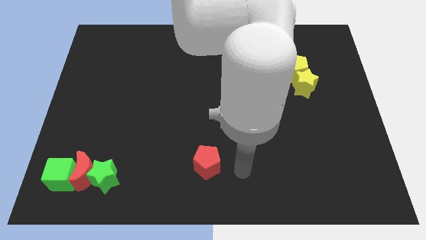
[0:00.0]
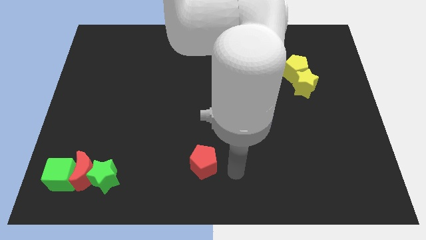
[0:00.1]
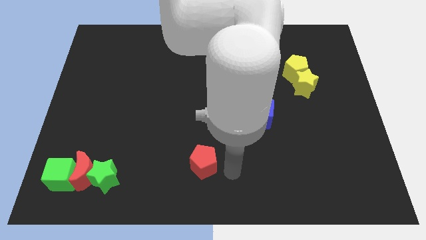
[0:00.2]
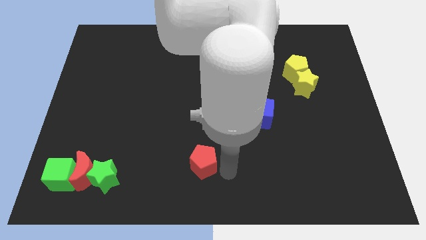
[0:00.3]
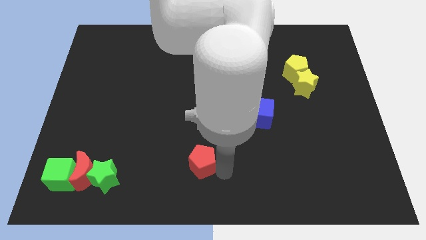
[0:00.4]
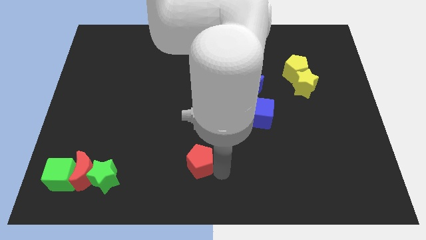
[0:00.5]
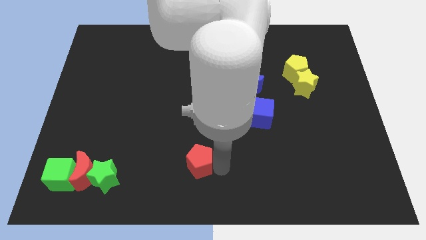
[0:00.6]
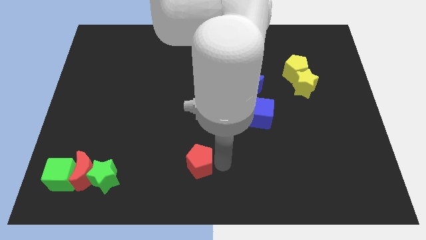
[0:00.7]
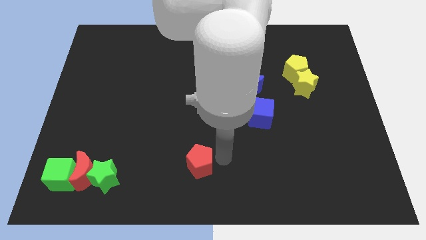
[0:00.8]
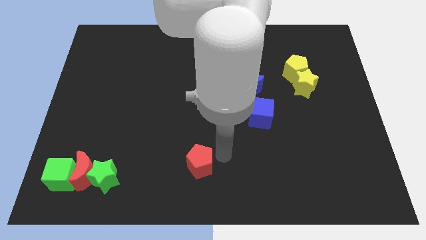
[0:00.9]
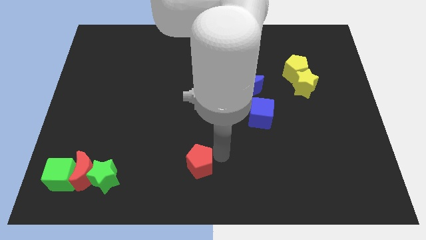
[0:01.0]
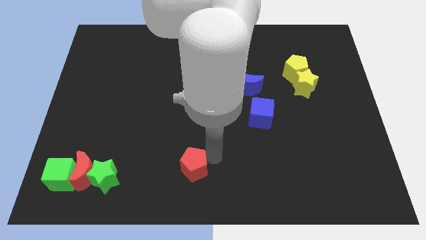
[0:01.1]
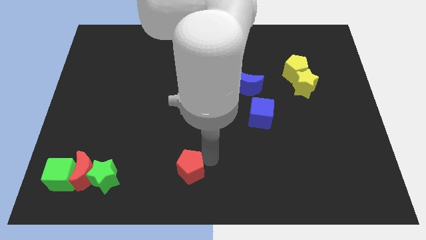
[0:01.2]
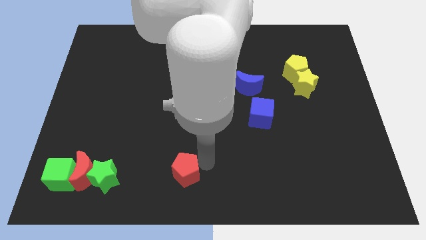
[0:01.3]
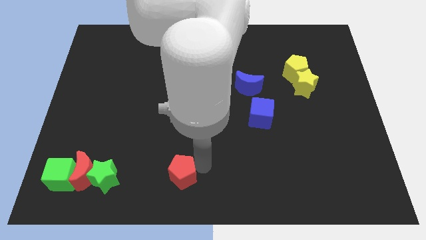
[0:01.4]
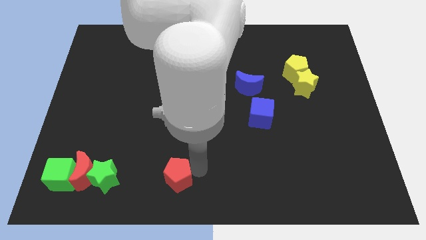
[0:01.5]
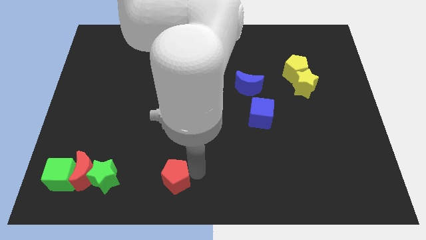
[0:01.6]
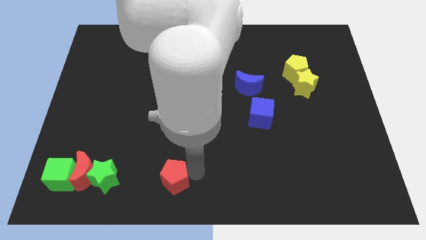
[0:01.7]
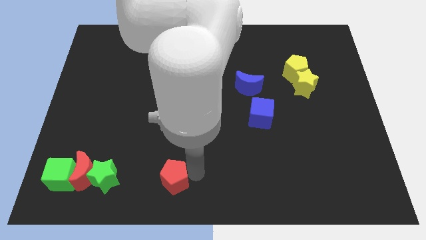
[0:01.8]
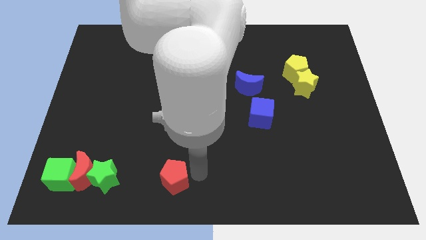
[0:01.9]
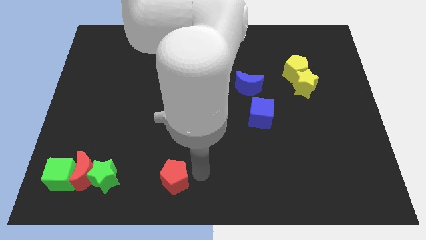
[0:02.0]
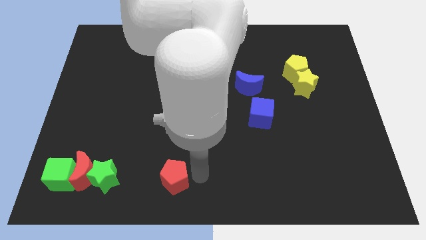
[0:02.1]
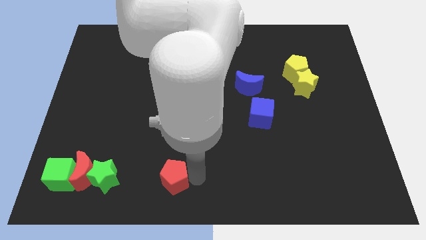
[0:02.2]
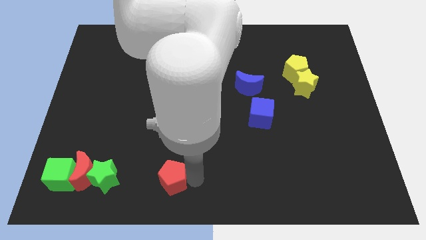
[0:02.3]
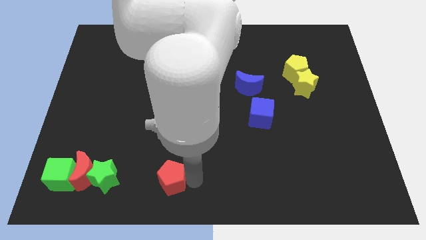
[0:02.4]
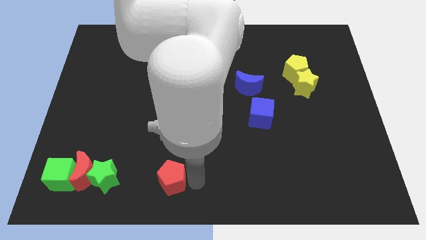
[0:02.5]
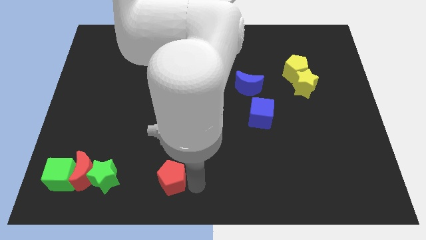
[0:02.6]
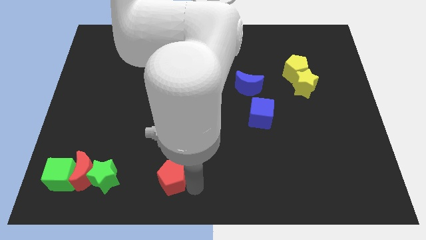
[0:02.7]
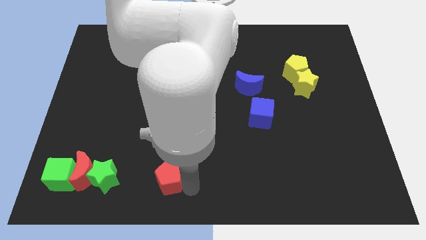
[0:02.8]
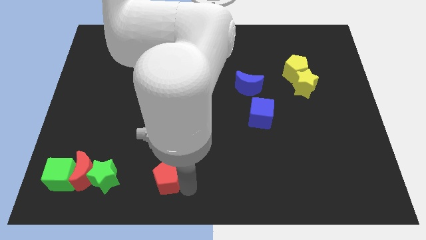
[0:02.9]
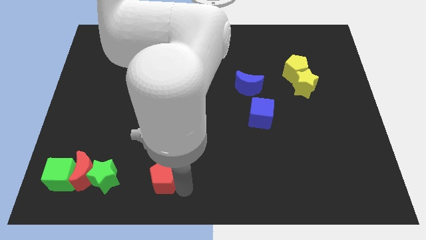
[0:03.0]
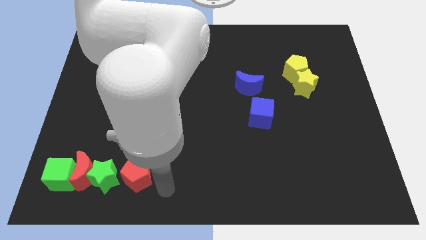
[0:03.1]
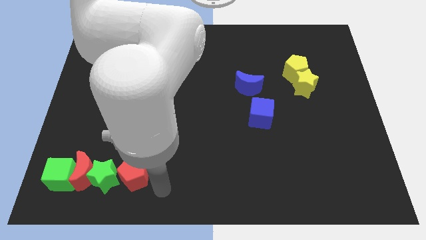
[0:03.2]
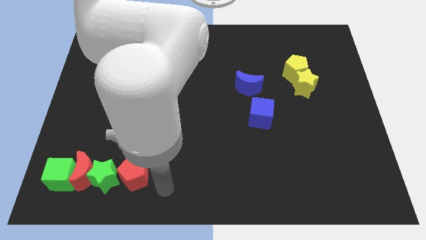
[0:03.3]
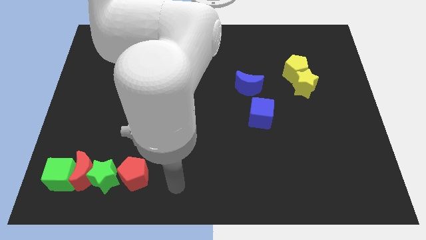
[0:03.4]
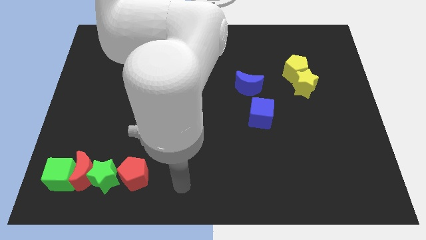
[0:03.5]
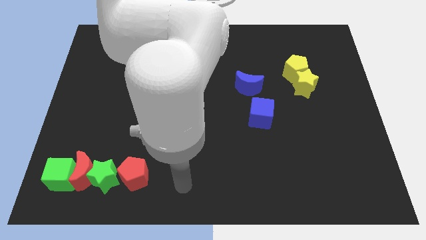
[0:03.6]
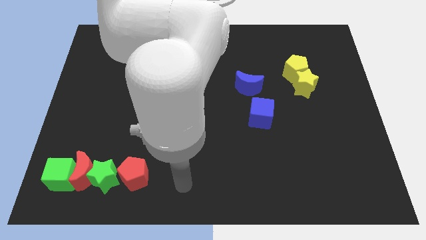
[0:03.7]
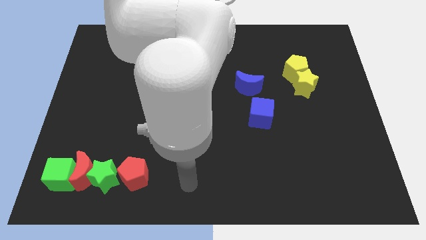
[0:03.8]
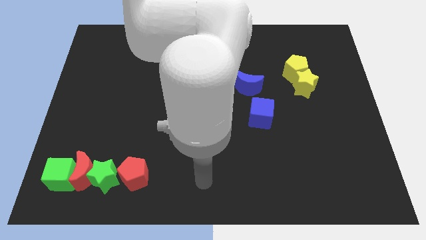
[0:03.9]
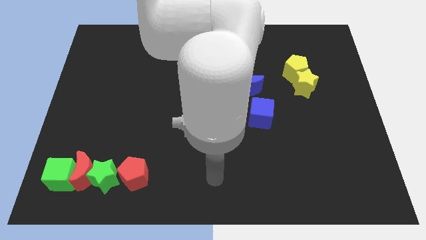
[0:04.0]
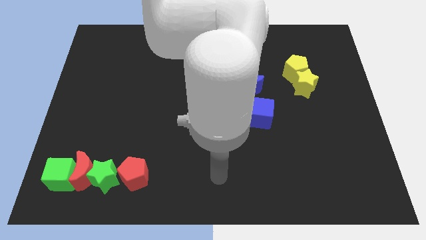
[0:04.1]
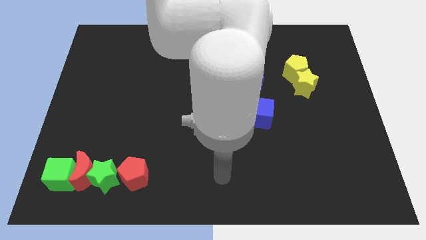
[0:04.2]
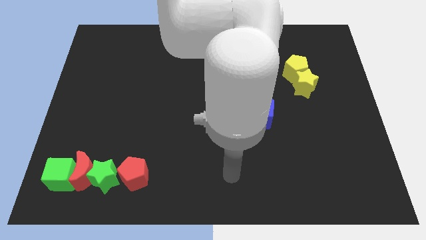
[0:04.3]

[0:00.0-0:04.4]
push red pentagon to the right of green star

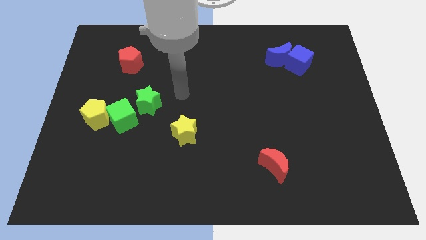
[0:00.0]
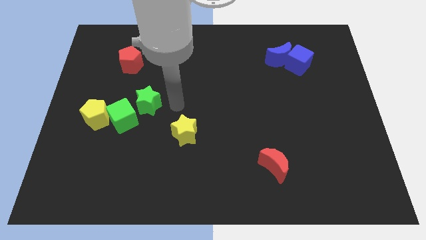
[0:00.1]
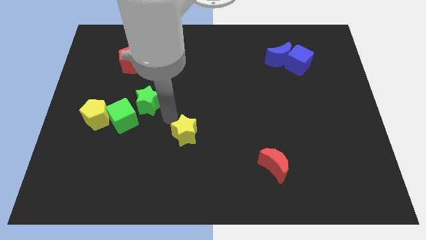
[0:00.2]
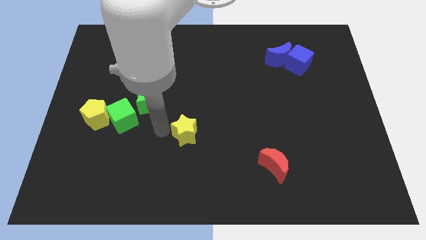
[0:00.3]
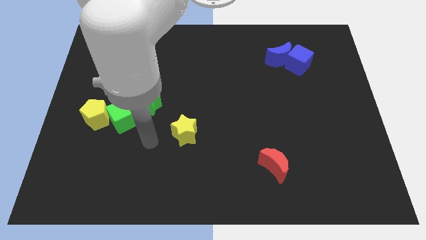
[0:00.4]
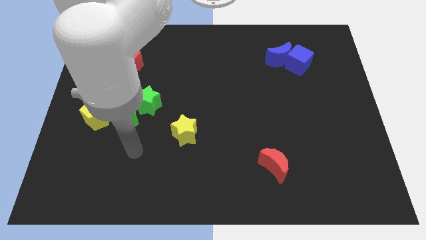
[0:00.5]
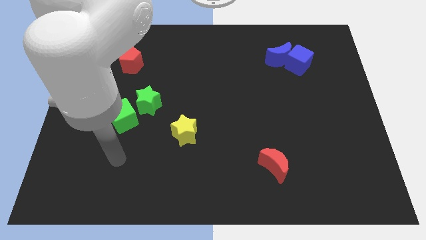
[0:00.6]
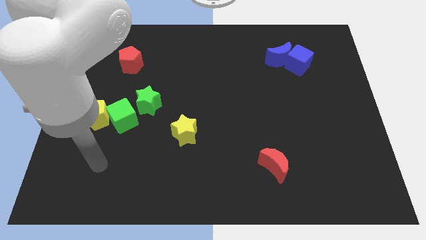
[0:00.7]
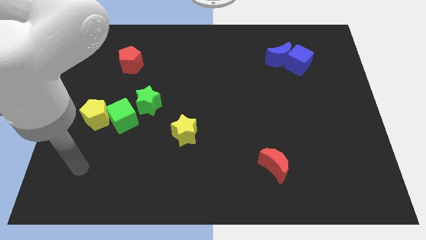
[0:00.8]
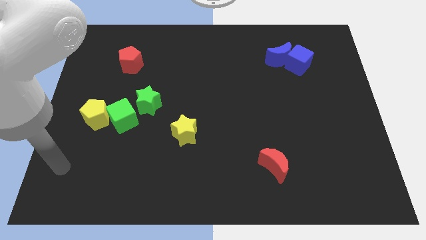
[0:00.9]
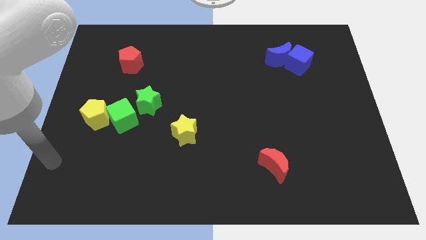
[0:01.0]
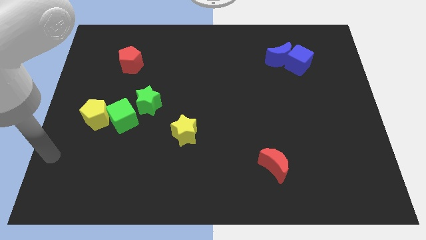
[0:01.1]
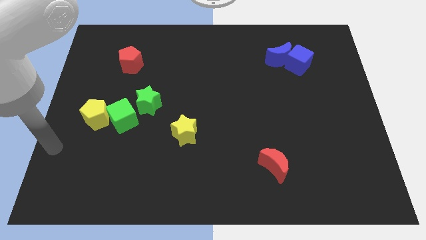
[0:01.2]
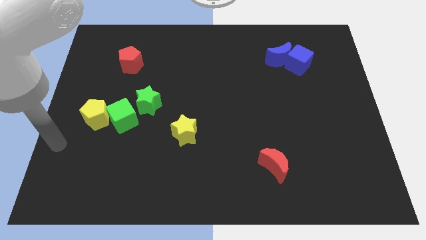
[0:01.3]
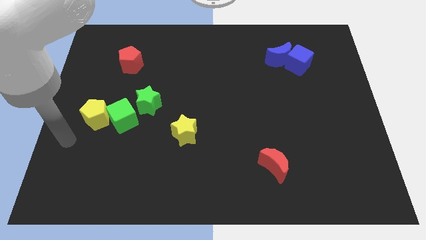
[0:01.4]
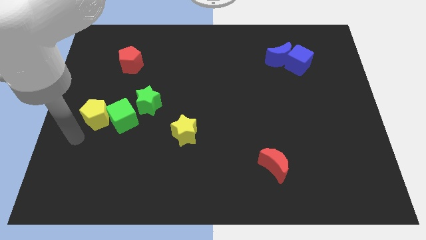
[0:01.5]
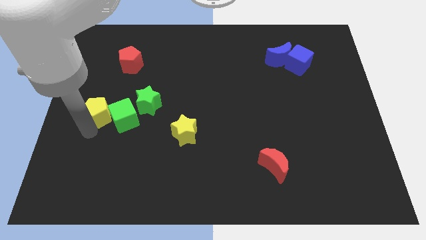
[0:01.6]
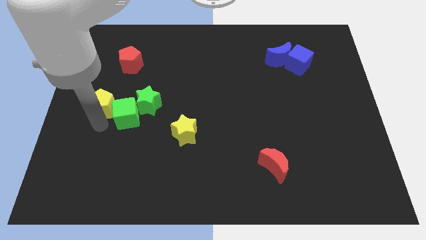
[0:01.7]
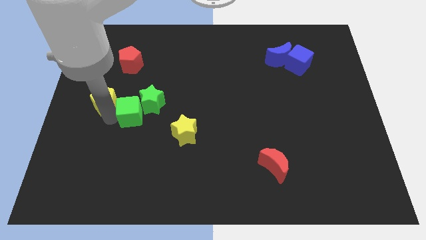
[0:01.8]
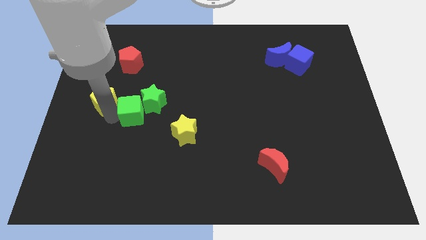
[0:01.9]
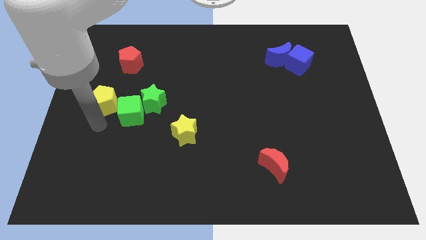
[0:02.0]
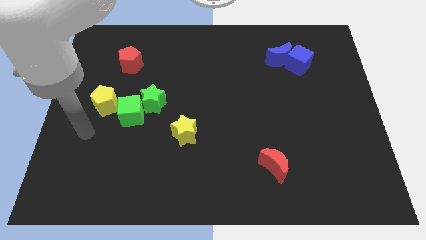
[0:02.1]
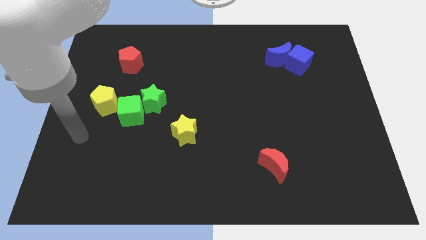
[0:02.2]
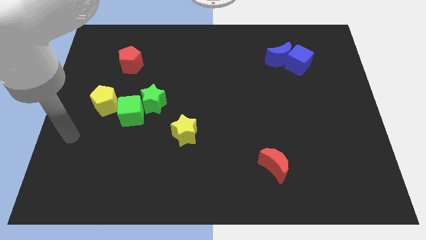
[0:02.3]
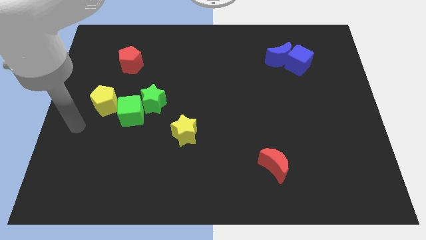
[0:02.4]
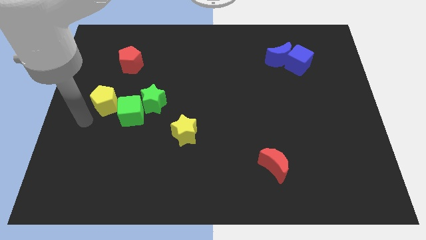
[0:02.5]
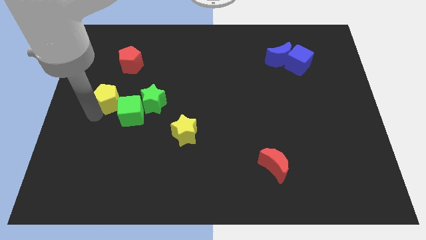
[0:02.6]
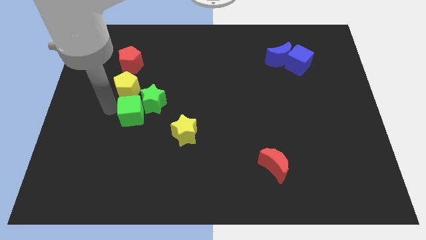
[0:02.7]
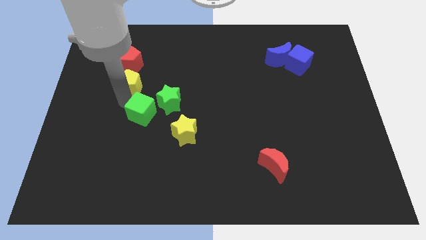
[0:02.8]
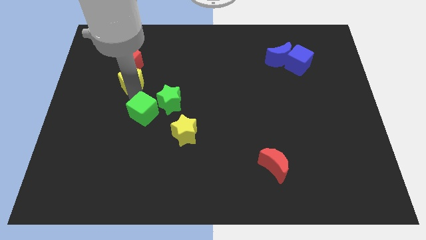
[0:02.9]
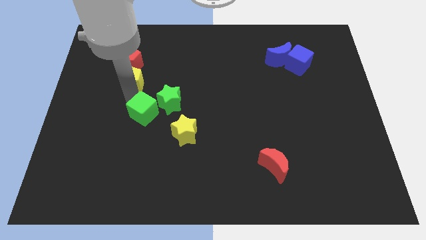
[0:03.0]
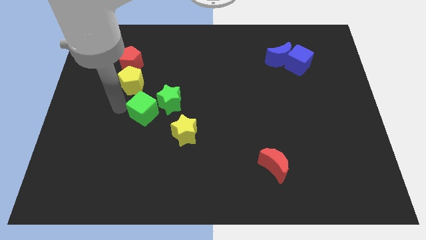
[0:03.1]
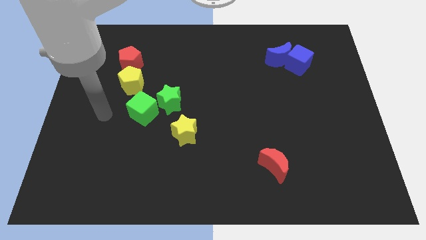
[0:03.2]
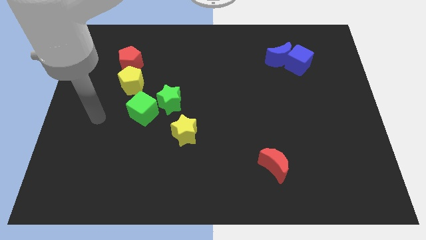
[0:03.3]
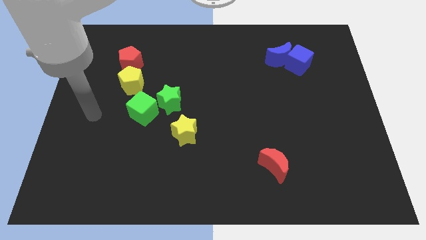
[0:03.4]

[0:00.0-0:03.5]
push the green blocks and yellow pentagon towards the top side of the board

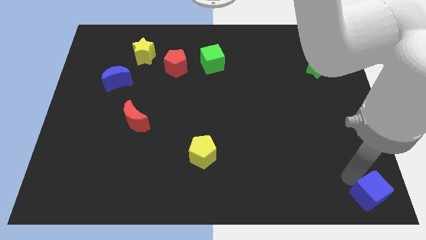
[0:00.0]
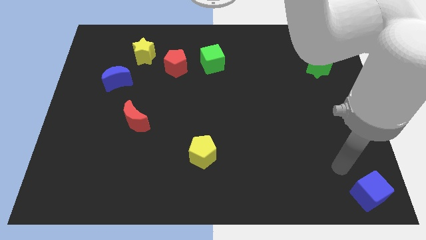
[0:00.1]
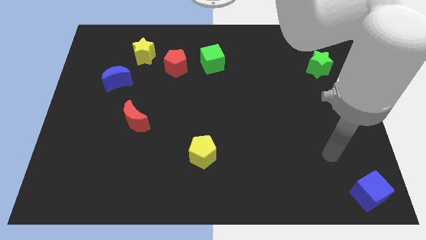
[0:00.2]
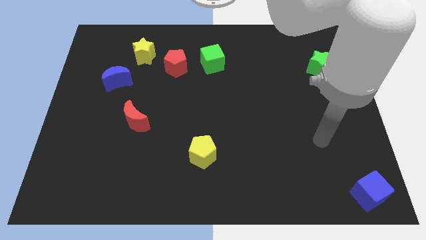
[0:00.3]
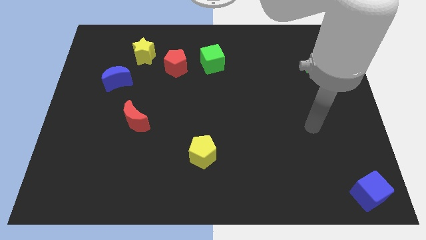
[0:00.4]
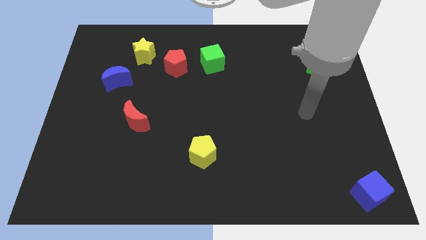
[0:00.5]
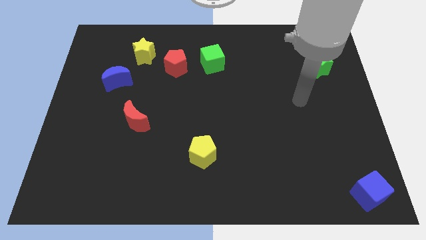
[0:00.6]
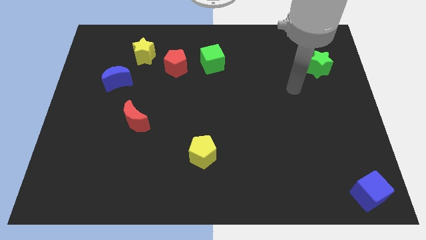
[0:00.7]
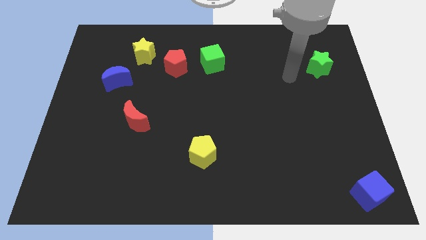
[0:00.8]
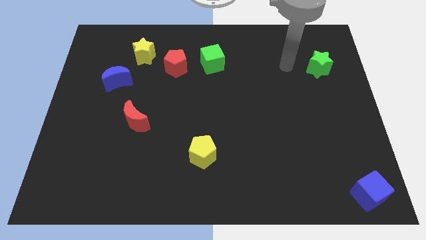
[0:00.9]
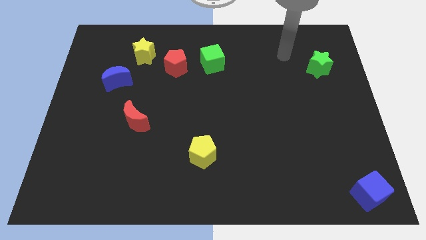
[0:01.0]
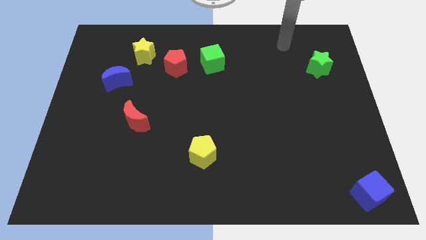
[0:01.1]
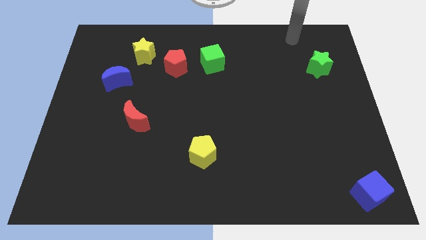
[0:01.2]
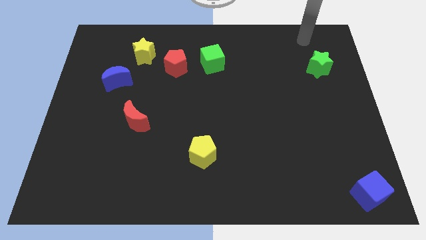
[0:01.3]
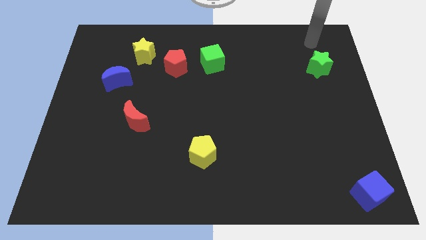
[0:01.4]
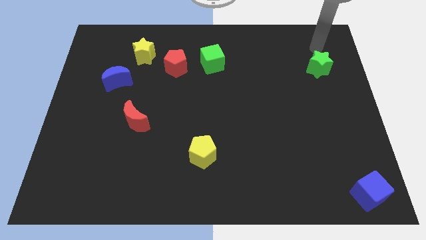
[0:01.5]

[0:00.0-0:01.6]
point your arm at the top of the green star
